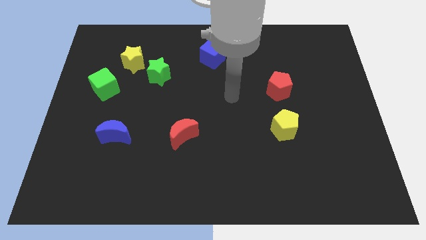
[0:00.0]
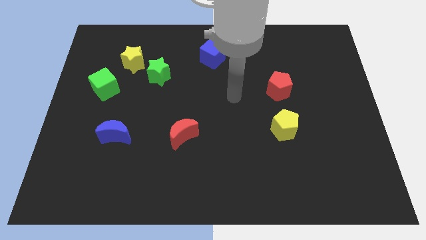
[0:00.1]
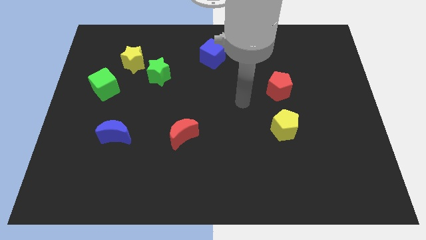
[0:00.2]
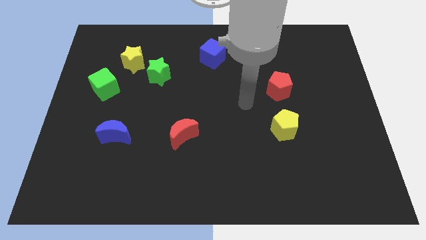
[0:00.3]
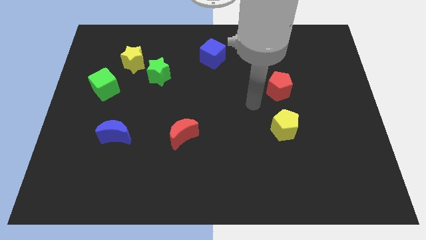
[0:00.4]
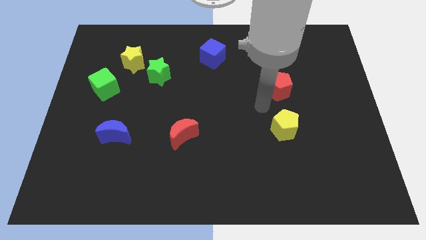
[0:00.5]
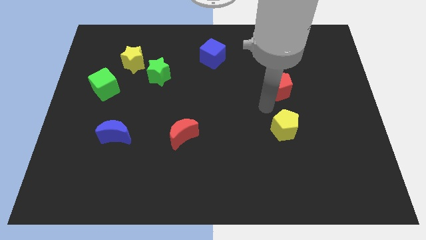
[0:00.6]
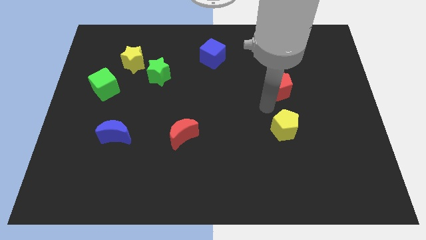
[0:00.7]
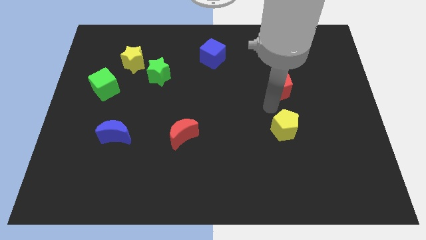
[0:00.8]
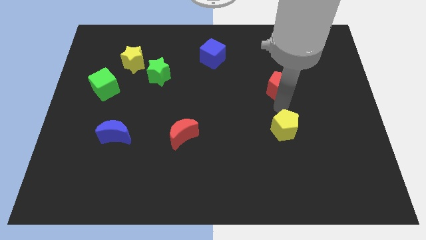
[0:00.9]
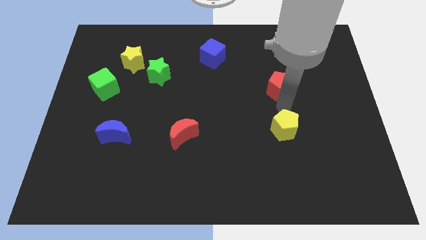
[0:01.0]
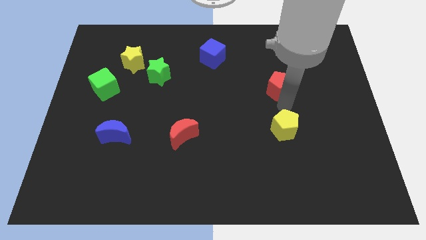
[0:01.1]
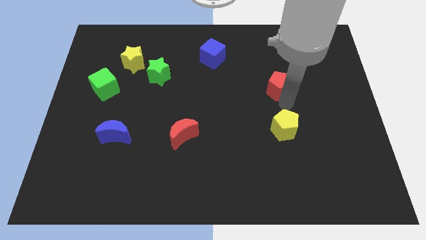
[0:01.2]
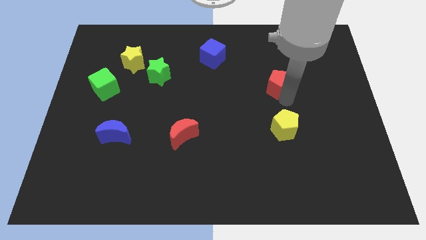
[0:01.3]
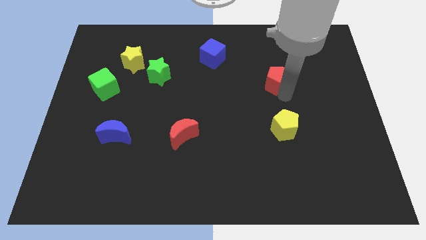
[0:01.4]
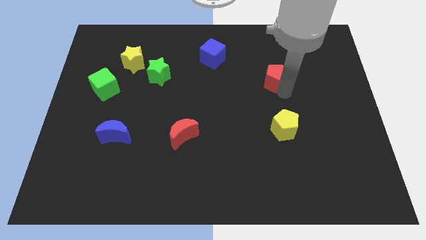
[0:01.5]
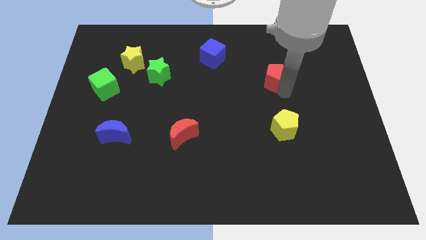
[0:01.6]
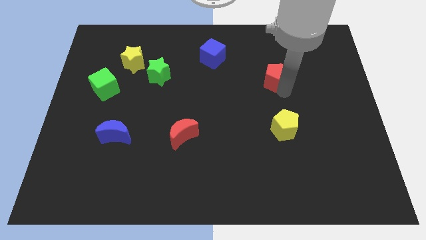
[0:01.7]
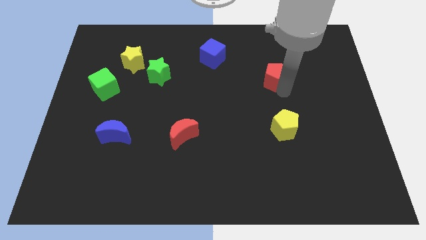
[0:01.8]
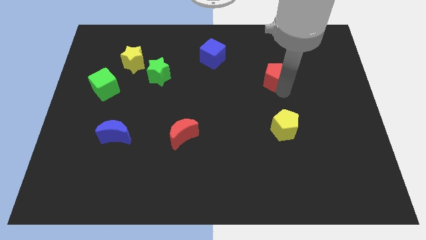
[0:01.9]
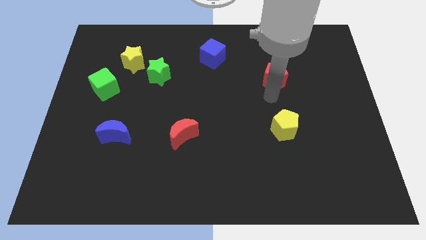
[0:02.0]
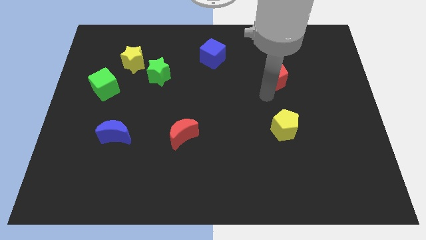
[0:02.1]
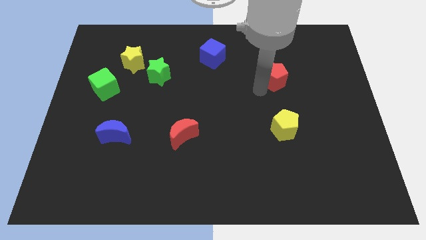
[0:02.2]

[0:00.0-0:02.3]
move the red pentagon to the top of the board

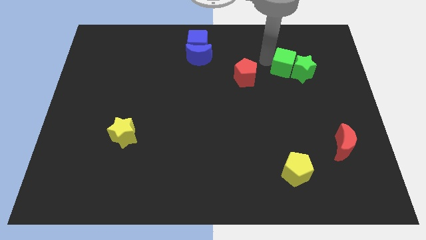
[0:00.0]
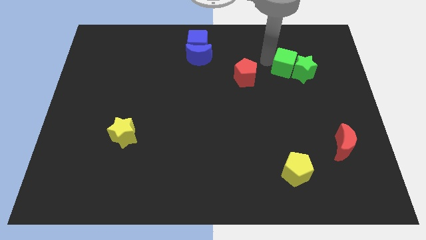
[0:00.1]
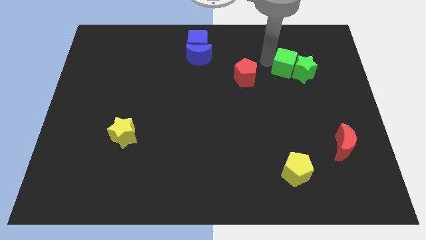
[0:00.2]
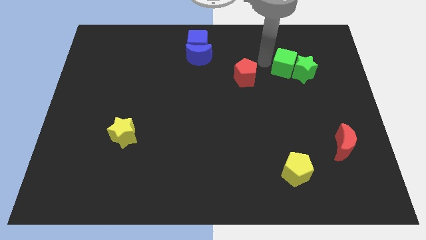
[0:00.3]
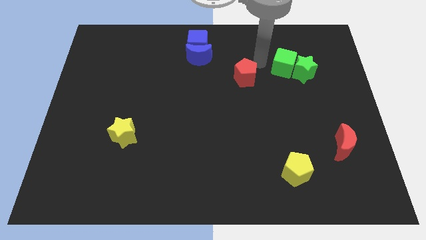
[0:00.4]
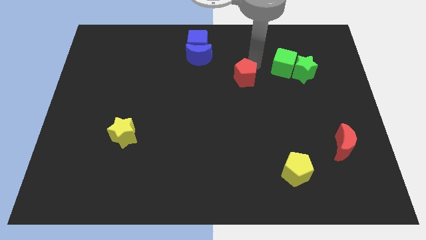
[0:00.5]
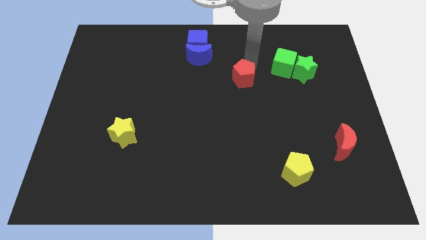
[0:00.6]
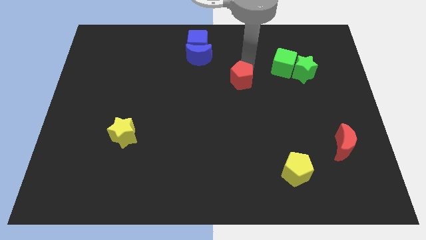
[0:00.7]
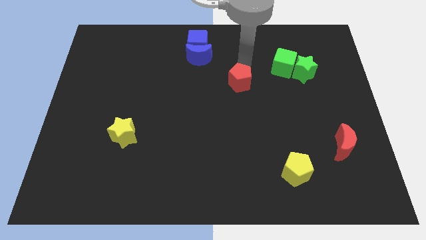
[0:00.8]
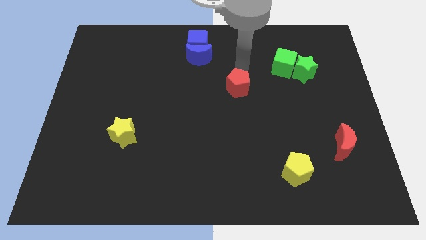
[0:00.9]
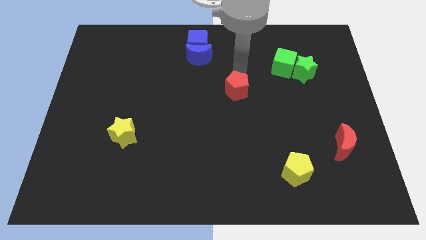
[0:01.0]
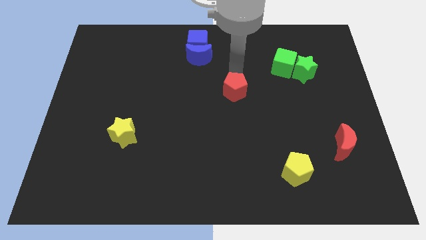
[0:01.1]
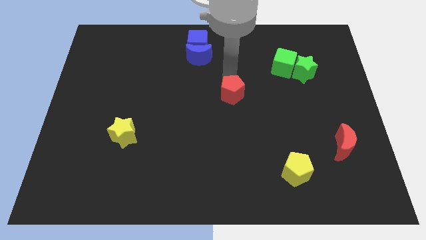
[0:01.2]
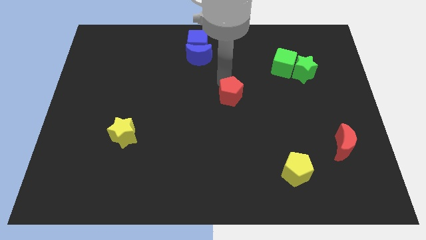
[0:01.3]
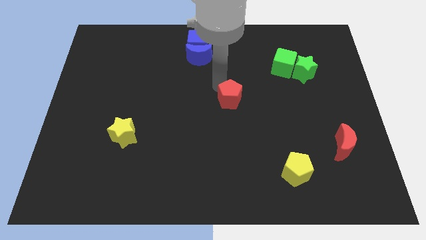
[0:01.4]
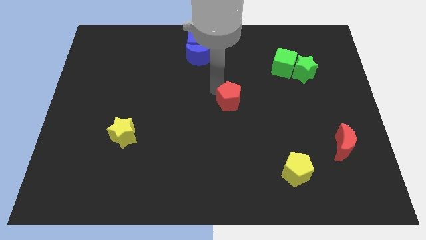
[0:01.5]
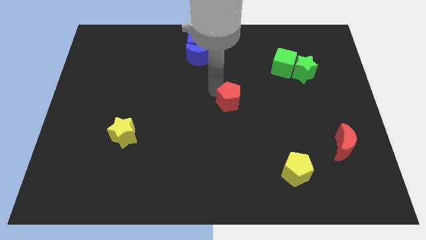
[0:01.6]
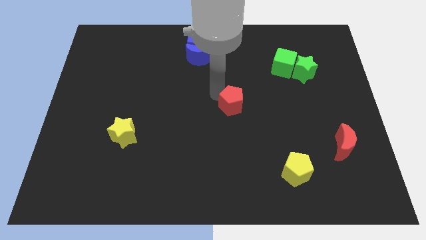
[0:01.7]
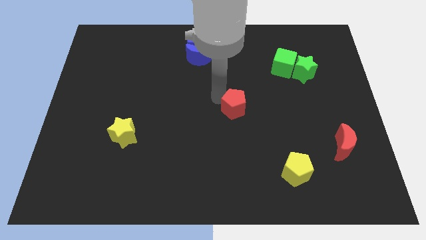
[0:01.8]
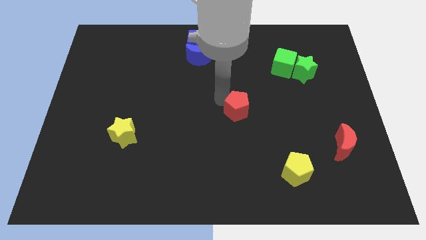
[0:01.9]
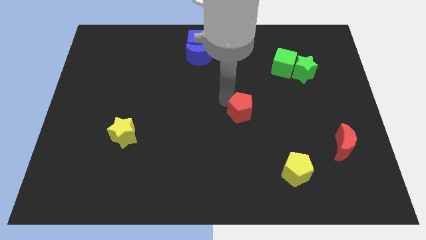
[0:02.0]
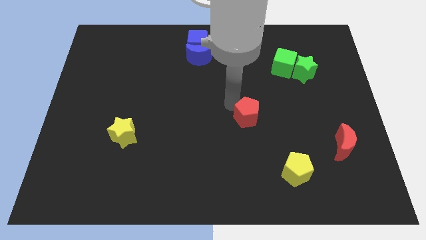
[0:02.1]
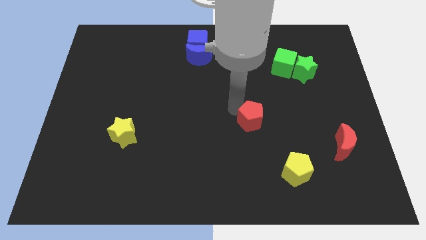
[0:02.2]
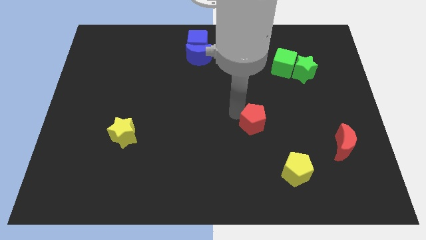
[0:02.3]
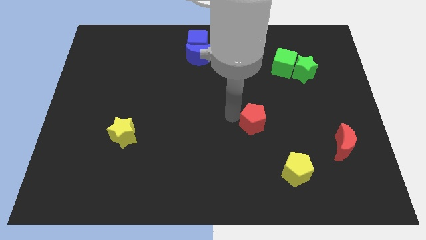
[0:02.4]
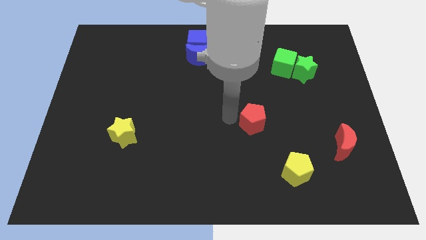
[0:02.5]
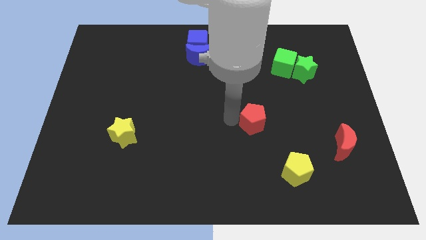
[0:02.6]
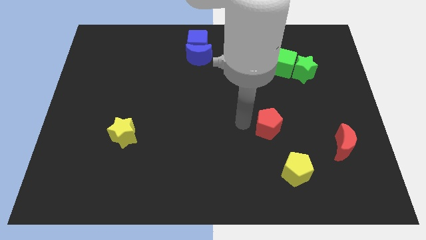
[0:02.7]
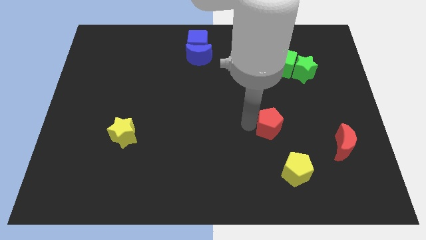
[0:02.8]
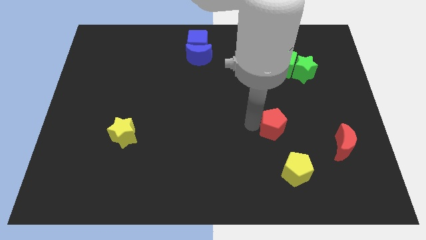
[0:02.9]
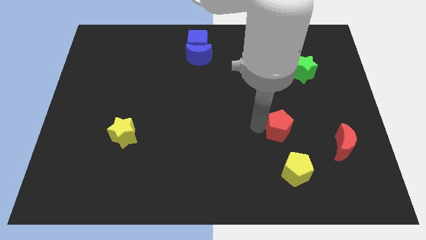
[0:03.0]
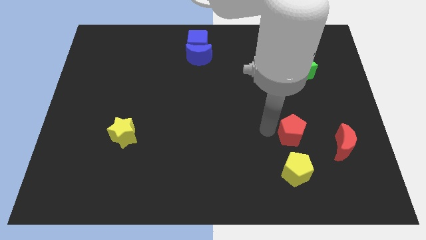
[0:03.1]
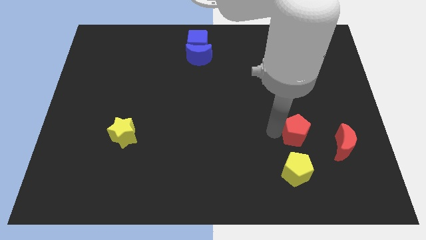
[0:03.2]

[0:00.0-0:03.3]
place the red pentagon to the top of the yellow pentagon

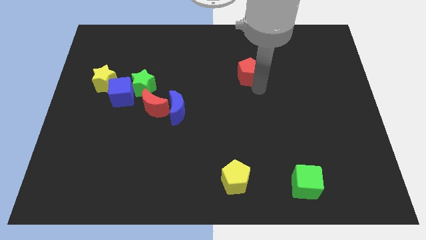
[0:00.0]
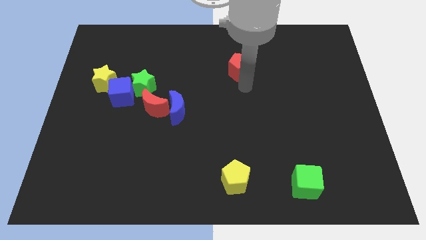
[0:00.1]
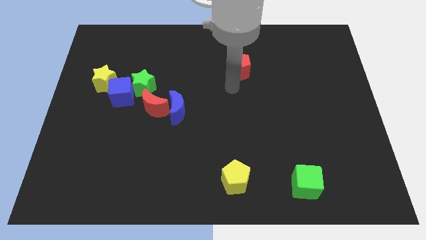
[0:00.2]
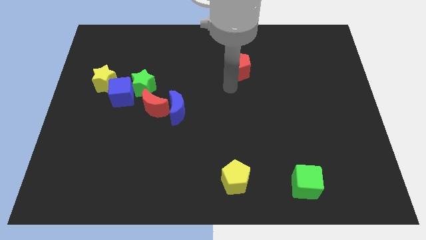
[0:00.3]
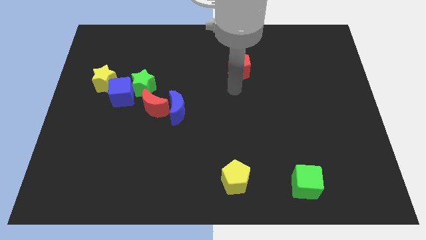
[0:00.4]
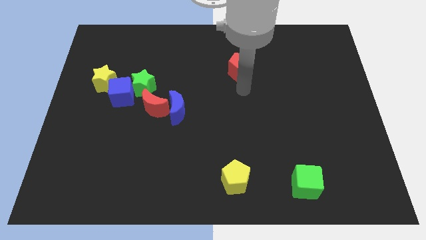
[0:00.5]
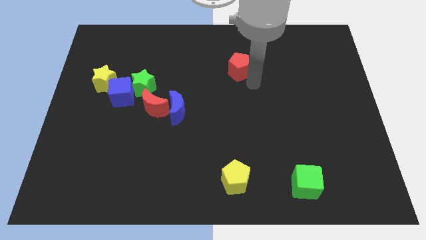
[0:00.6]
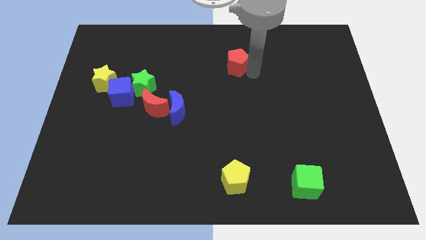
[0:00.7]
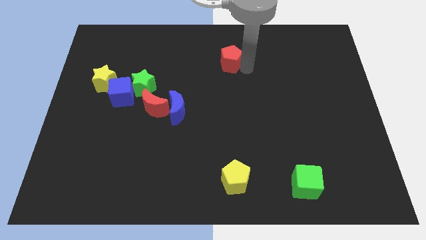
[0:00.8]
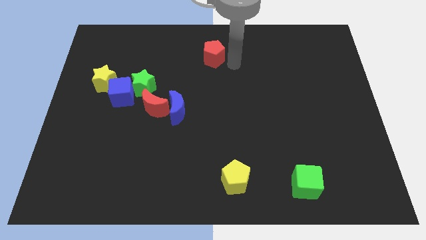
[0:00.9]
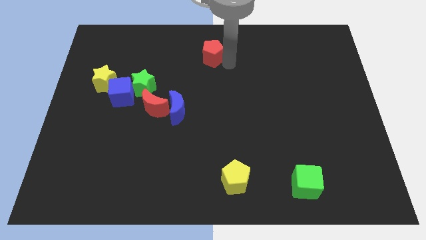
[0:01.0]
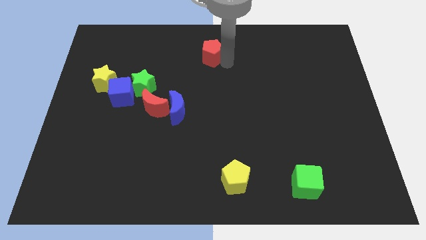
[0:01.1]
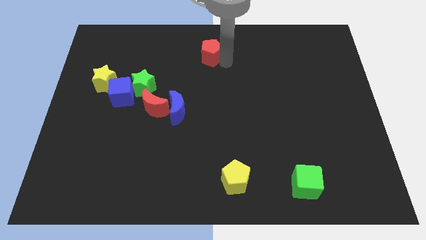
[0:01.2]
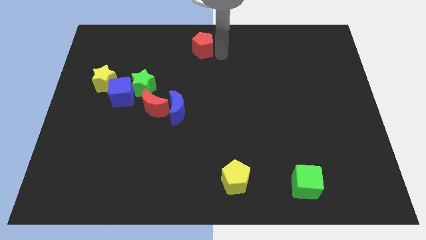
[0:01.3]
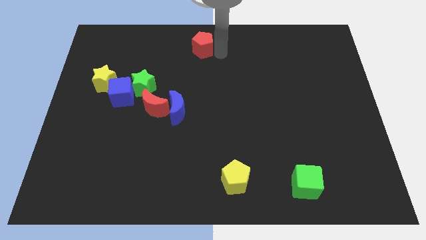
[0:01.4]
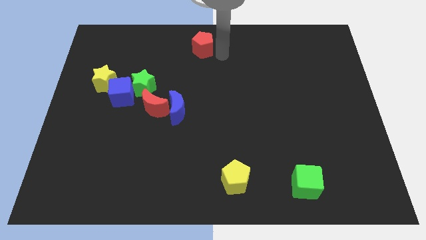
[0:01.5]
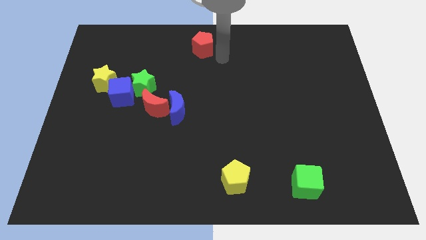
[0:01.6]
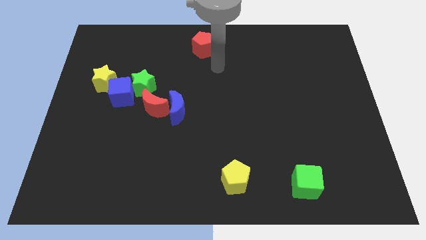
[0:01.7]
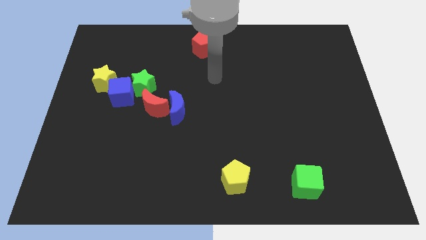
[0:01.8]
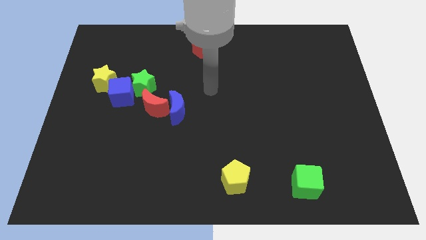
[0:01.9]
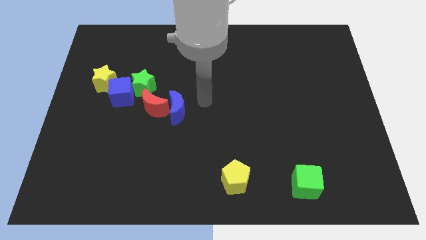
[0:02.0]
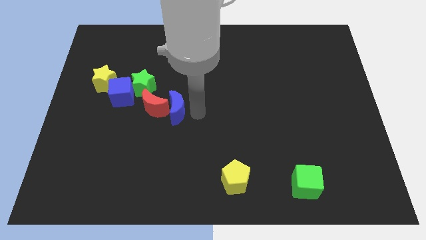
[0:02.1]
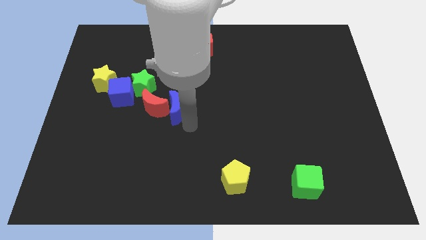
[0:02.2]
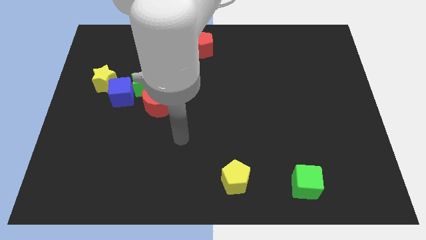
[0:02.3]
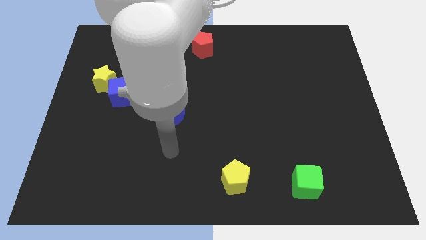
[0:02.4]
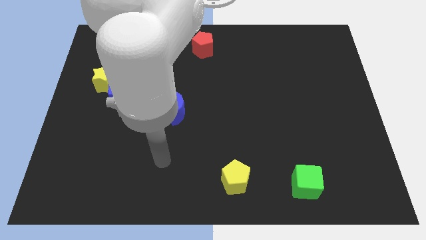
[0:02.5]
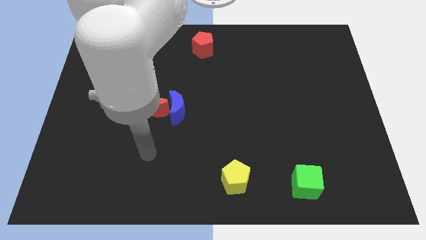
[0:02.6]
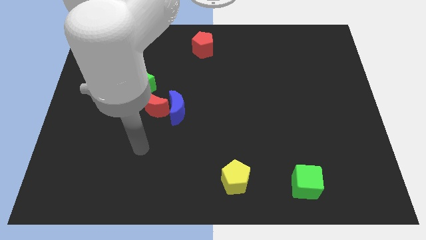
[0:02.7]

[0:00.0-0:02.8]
push red crescent to the top center of the board

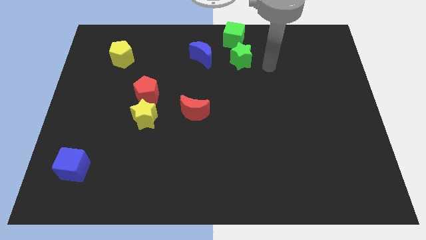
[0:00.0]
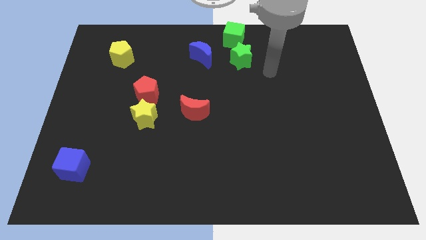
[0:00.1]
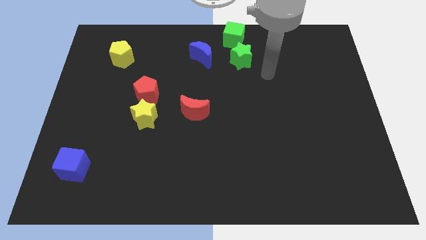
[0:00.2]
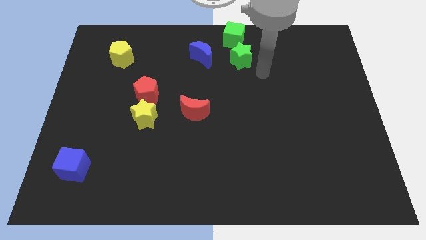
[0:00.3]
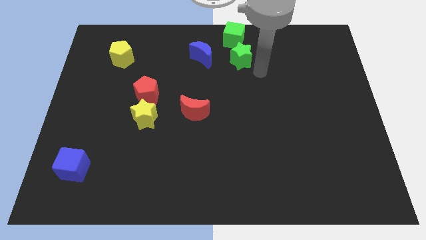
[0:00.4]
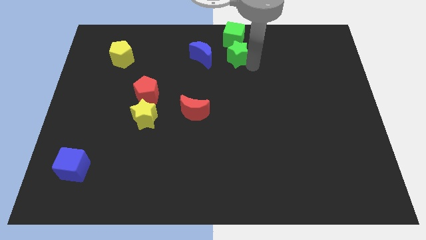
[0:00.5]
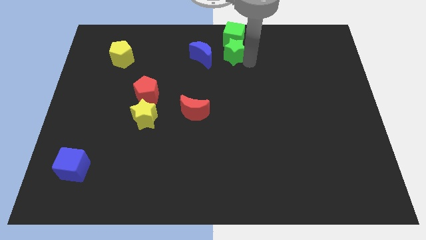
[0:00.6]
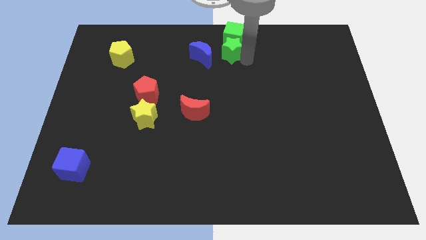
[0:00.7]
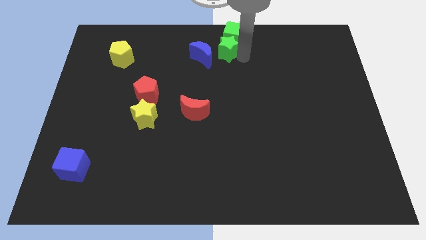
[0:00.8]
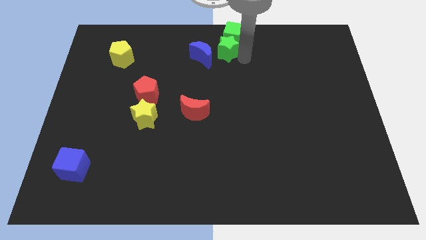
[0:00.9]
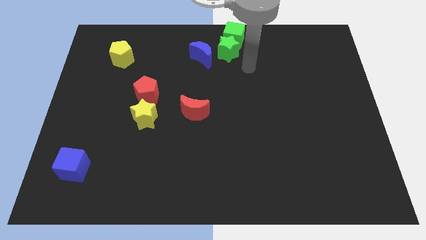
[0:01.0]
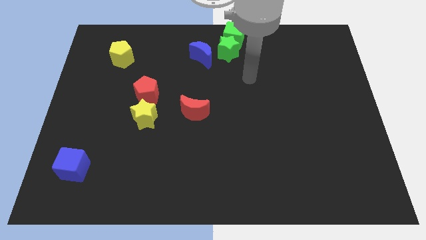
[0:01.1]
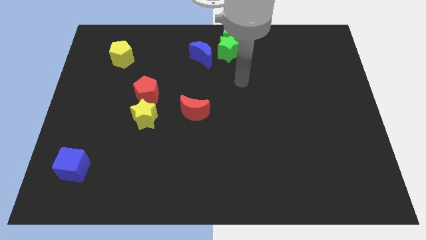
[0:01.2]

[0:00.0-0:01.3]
move the green star close to the green cube
